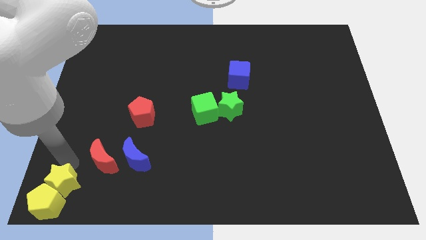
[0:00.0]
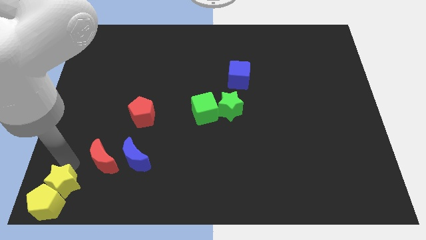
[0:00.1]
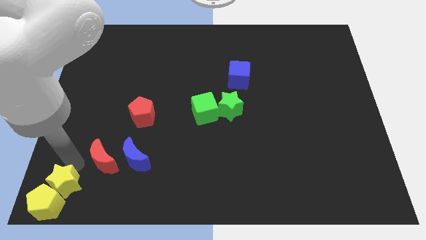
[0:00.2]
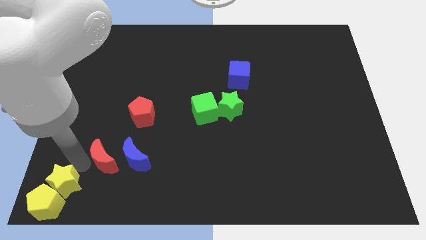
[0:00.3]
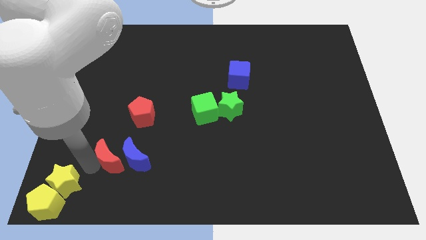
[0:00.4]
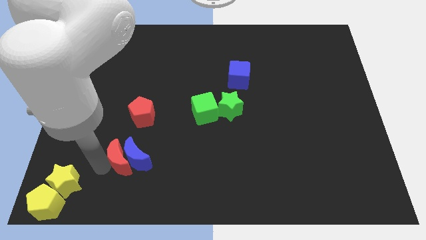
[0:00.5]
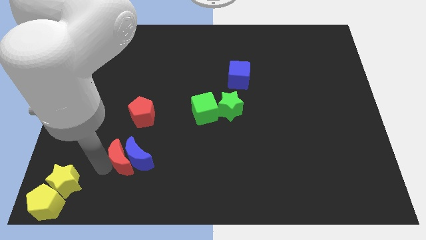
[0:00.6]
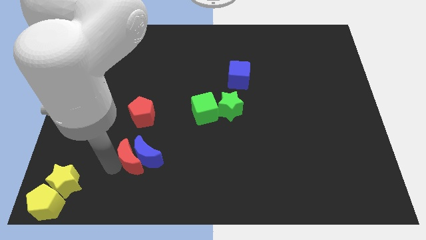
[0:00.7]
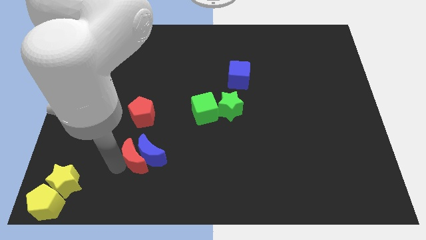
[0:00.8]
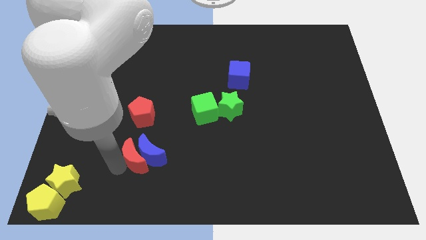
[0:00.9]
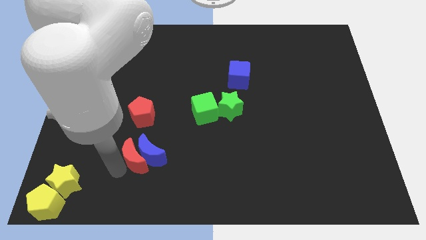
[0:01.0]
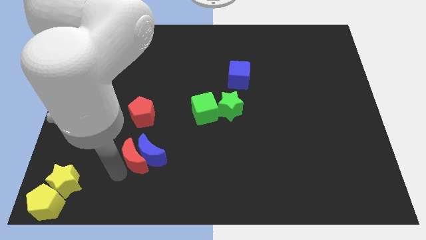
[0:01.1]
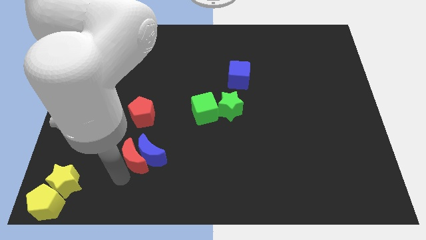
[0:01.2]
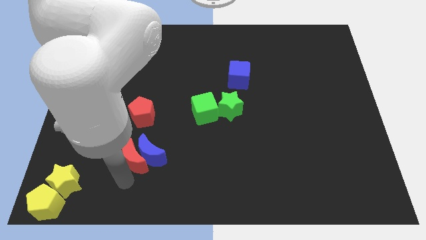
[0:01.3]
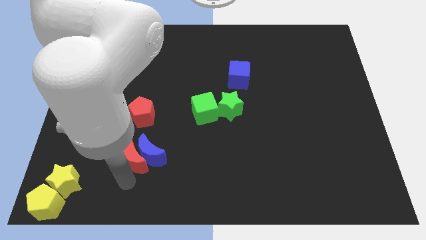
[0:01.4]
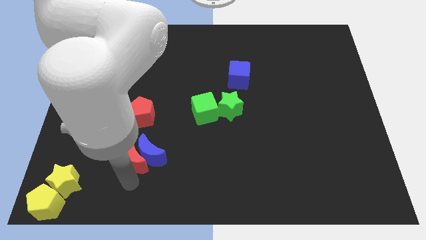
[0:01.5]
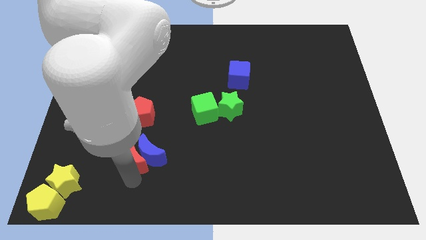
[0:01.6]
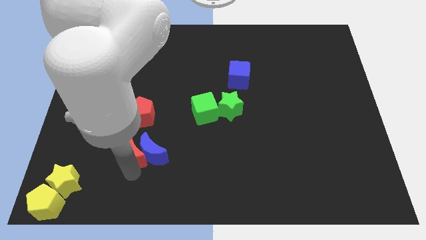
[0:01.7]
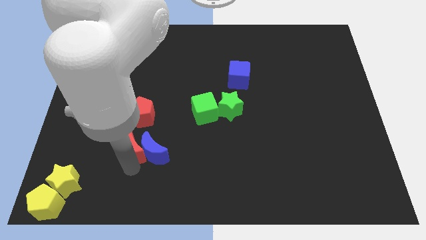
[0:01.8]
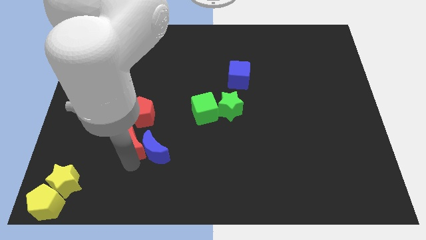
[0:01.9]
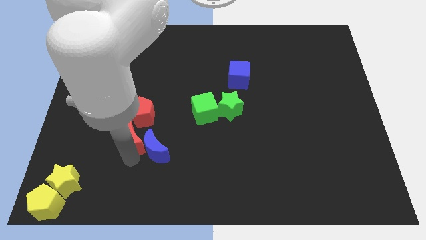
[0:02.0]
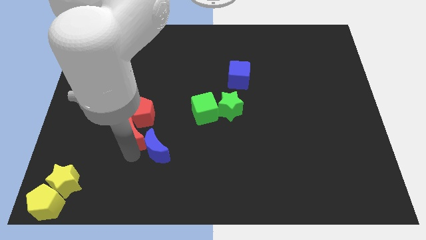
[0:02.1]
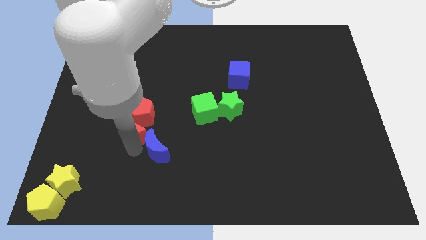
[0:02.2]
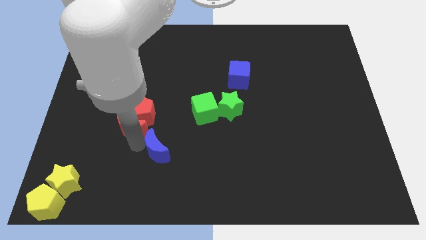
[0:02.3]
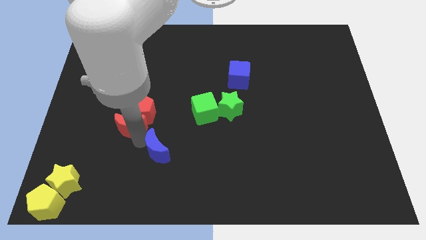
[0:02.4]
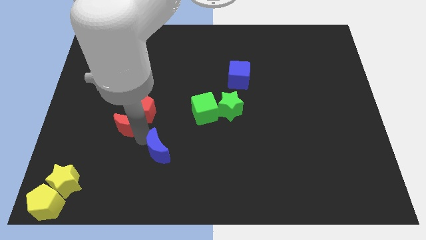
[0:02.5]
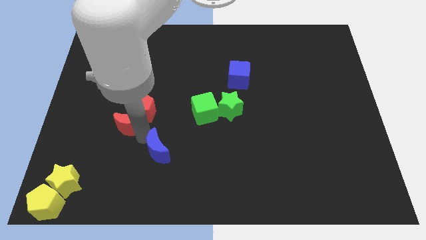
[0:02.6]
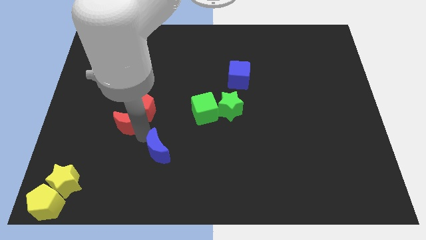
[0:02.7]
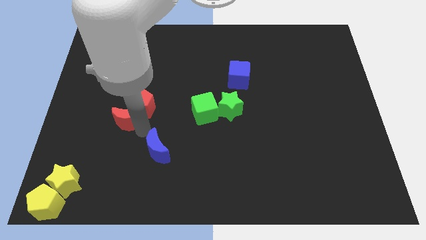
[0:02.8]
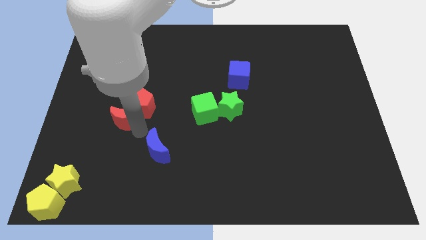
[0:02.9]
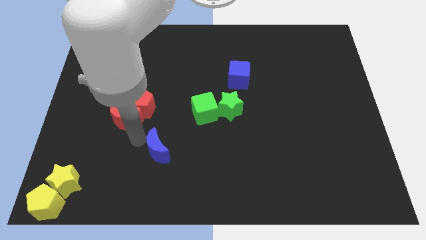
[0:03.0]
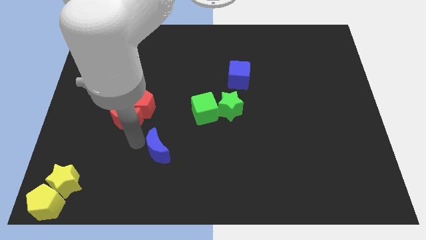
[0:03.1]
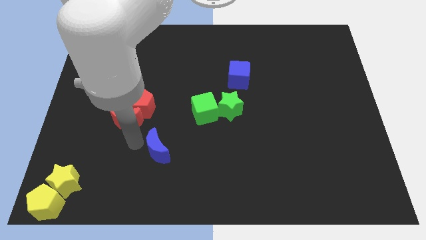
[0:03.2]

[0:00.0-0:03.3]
push the red moon into the red pentagon

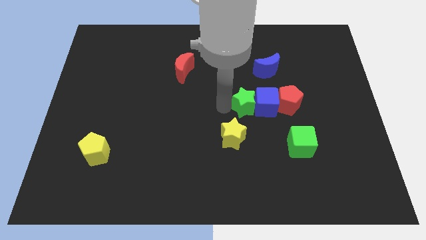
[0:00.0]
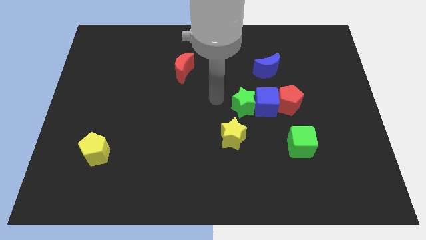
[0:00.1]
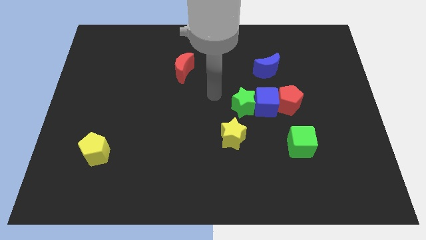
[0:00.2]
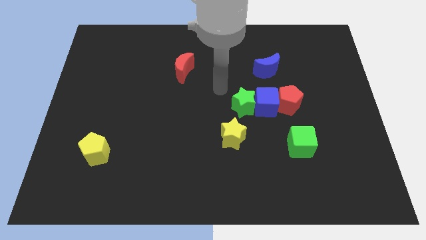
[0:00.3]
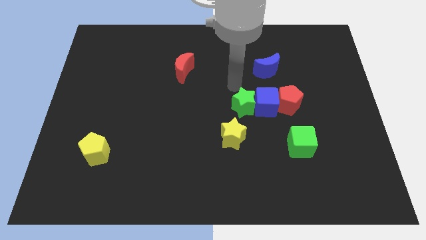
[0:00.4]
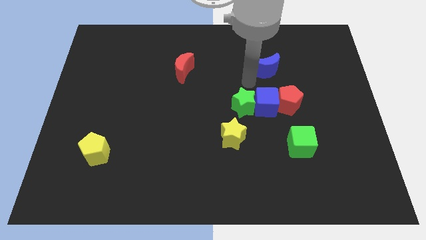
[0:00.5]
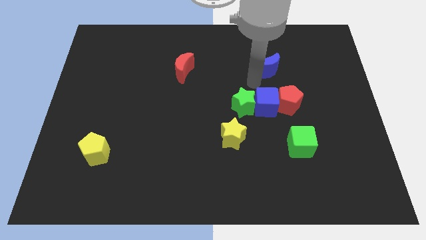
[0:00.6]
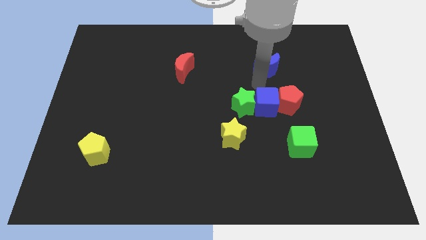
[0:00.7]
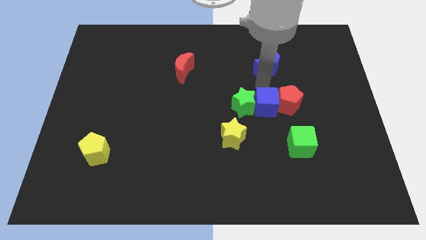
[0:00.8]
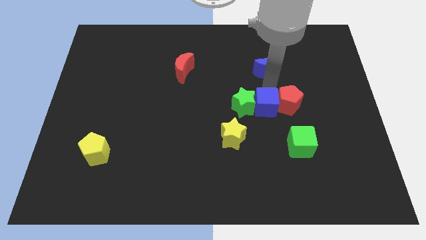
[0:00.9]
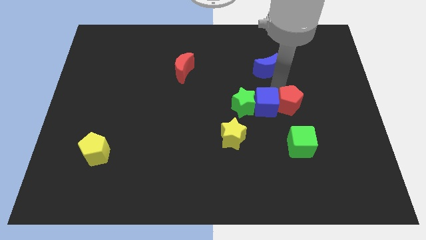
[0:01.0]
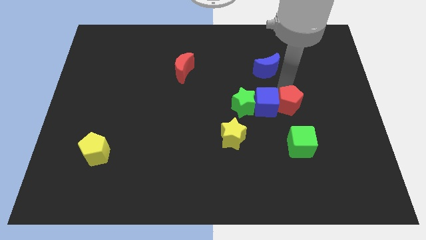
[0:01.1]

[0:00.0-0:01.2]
move your arm away from green star

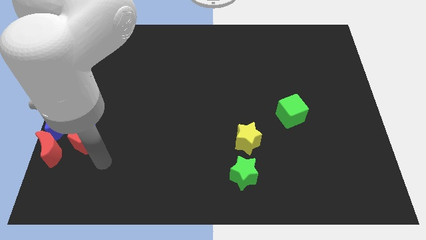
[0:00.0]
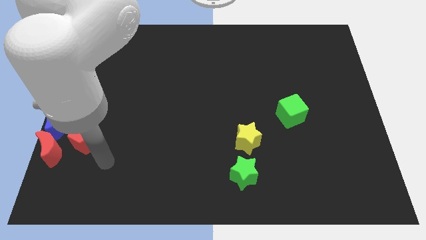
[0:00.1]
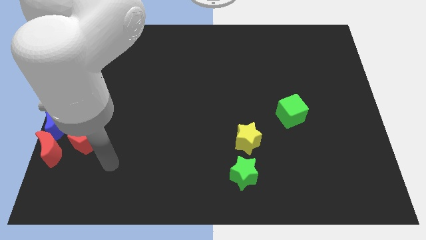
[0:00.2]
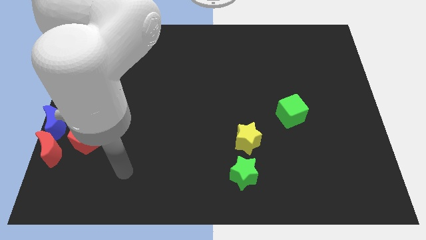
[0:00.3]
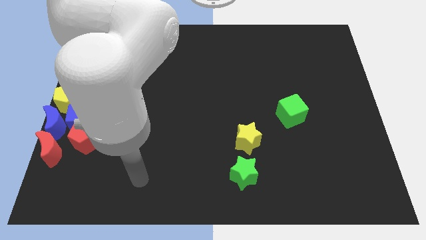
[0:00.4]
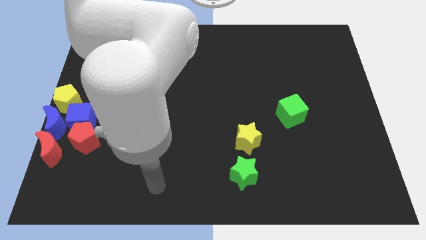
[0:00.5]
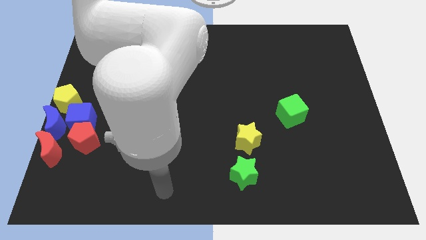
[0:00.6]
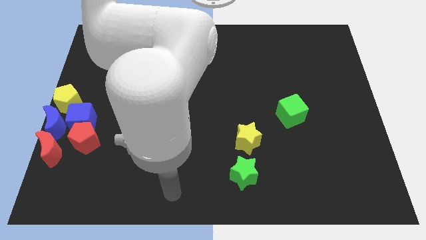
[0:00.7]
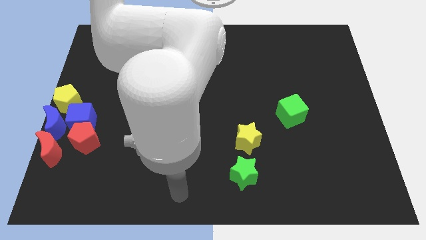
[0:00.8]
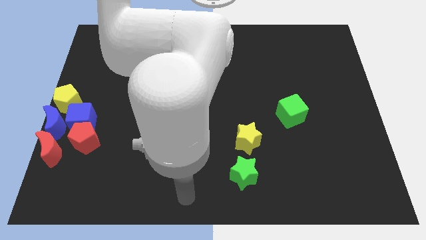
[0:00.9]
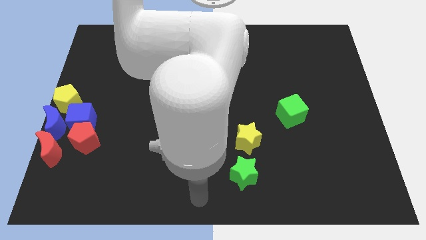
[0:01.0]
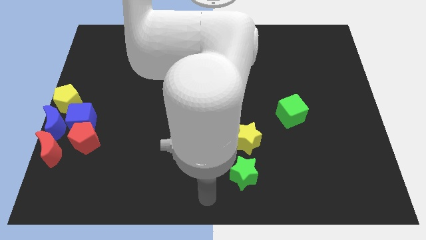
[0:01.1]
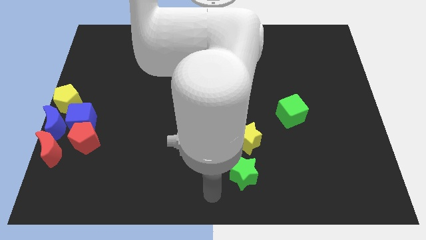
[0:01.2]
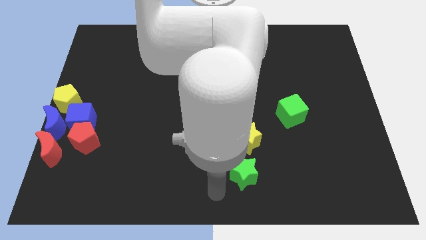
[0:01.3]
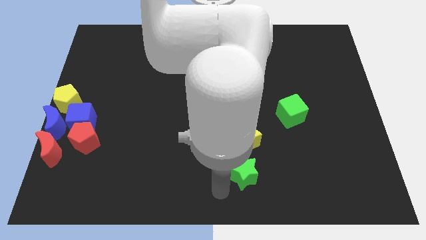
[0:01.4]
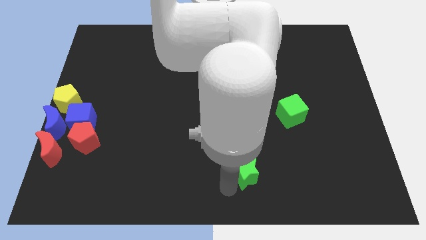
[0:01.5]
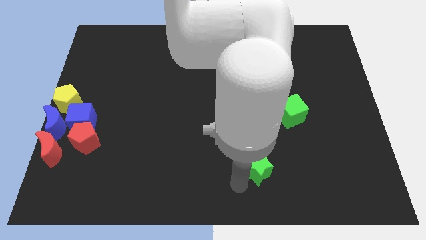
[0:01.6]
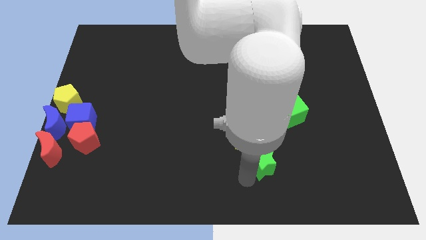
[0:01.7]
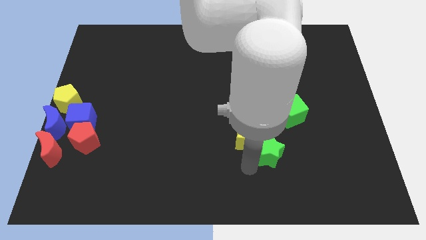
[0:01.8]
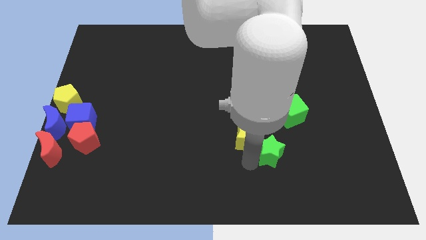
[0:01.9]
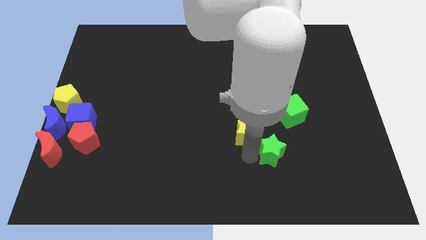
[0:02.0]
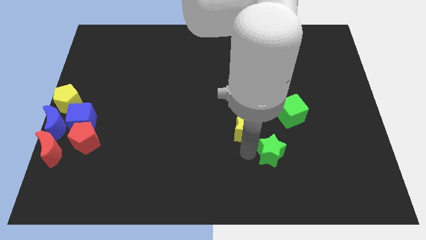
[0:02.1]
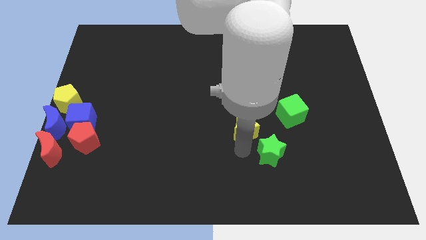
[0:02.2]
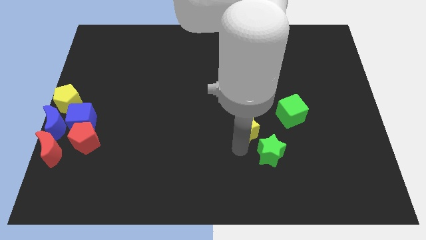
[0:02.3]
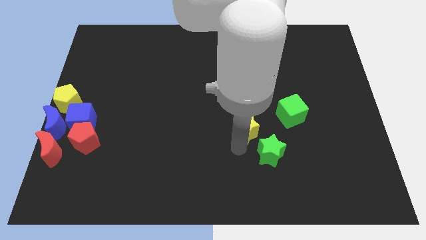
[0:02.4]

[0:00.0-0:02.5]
put the green star at the bottom right side of the yellow star

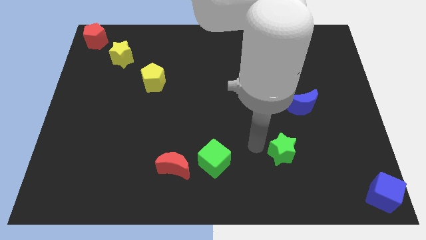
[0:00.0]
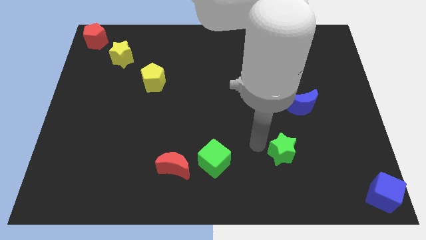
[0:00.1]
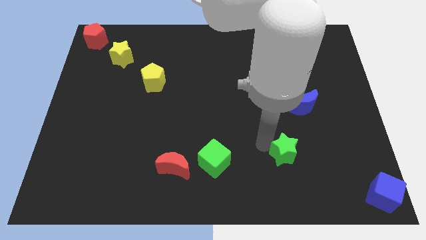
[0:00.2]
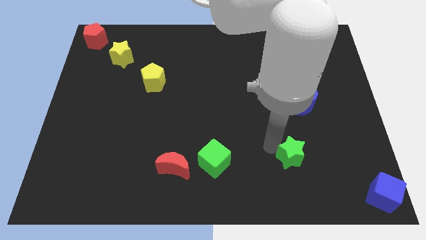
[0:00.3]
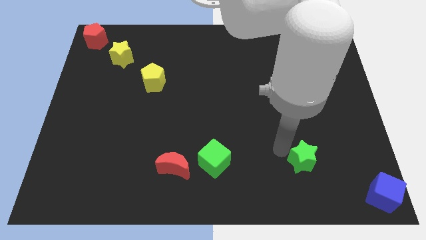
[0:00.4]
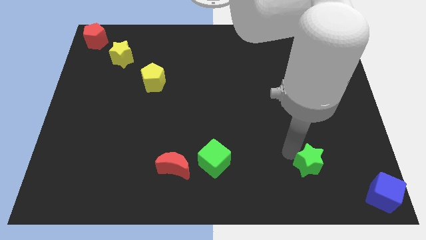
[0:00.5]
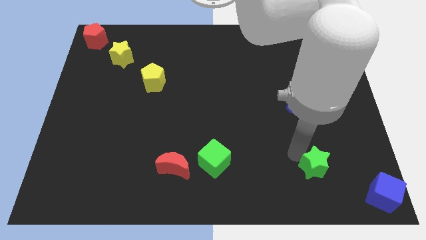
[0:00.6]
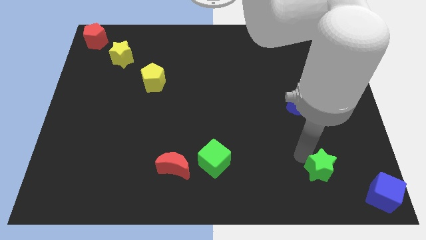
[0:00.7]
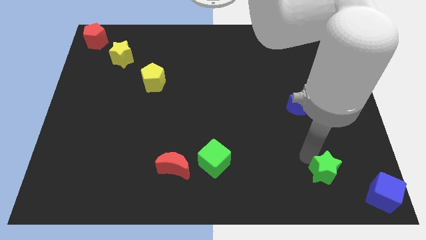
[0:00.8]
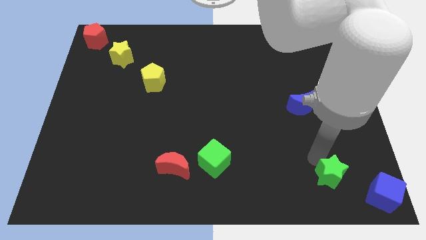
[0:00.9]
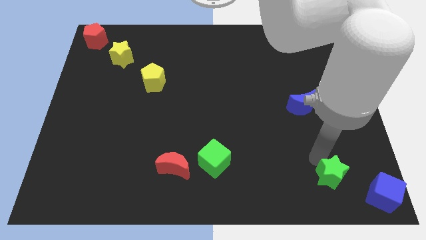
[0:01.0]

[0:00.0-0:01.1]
push the green star to the top left of the blue cube

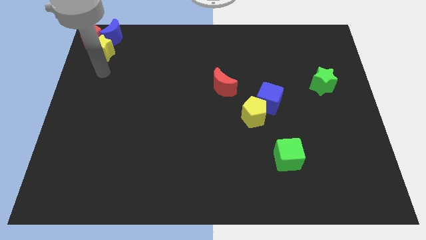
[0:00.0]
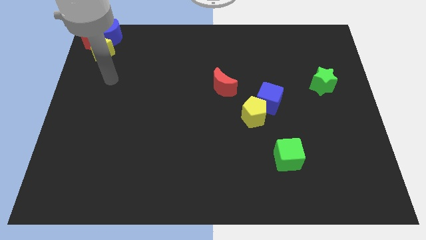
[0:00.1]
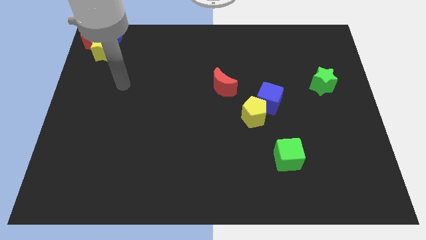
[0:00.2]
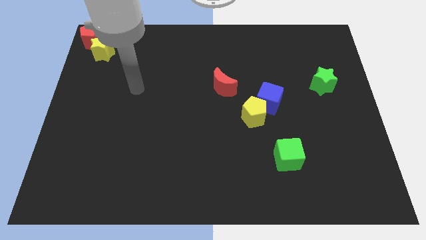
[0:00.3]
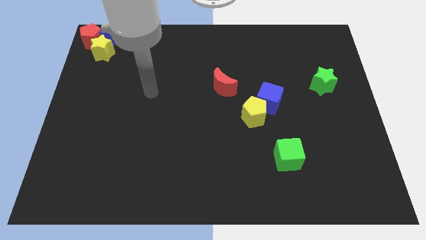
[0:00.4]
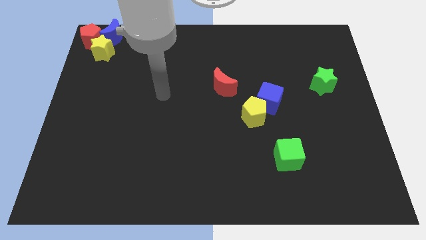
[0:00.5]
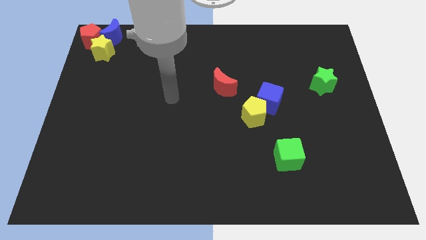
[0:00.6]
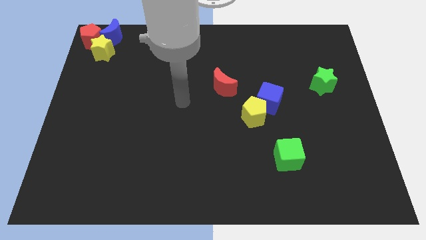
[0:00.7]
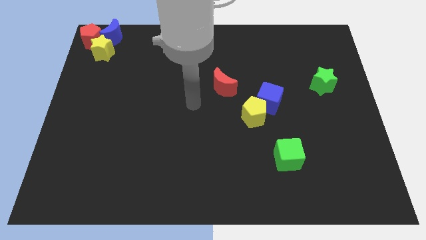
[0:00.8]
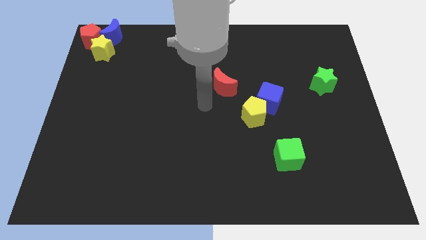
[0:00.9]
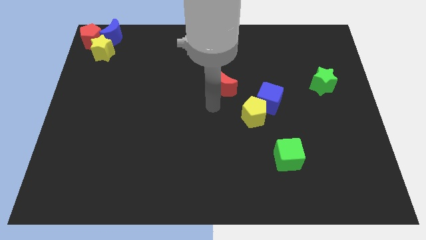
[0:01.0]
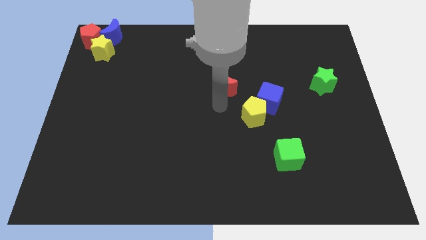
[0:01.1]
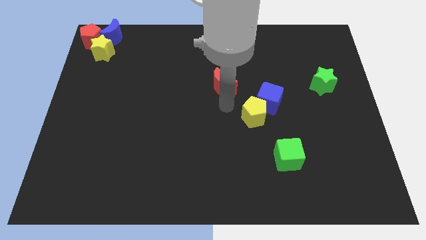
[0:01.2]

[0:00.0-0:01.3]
place your arm at the bottom of the red crescent
